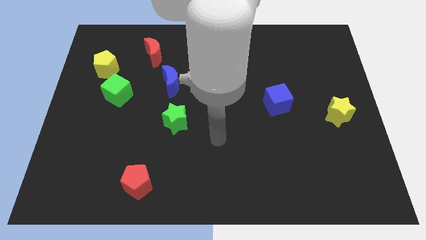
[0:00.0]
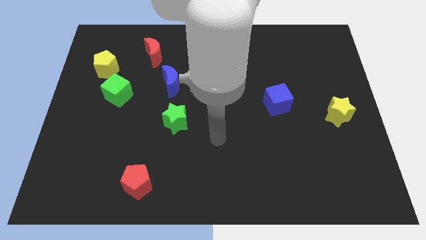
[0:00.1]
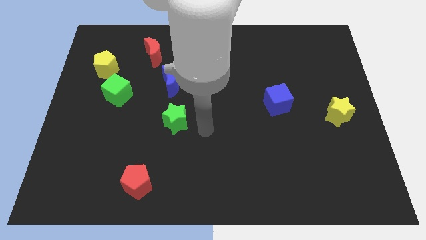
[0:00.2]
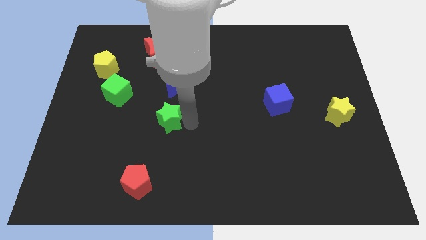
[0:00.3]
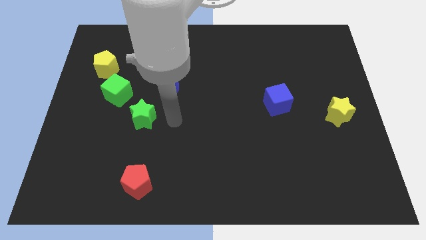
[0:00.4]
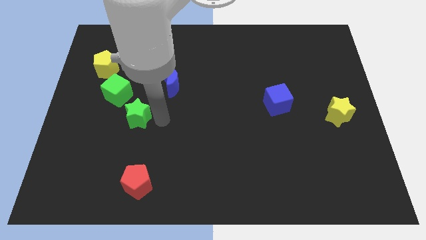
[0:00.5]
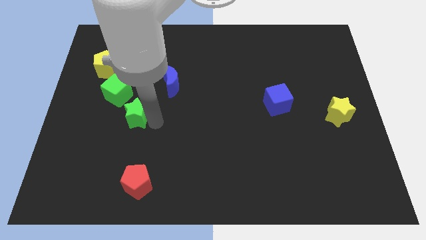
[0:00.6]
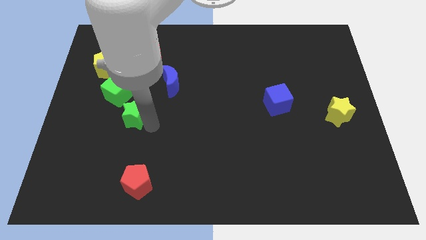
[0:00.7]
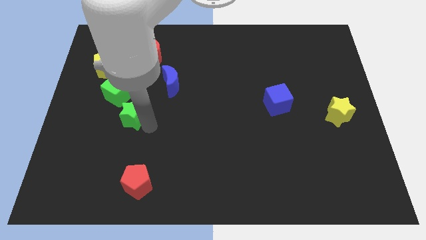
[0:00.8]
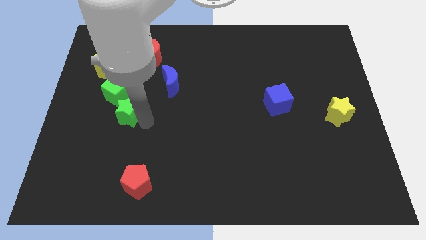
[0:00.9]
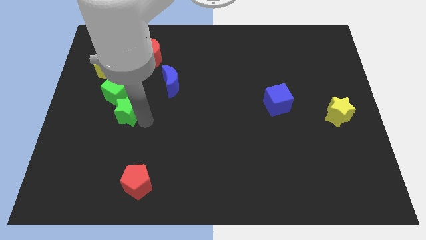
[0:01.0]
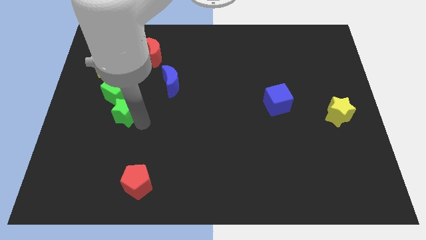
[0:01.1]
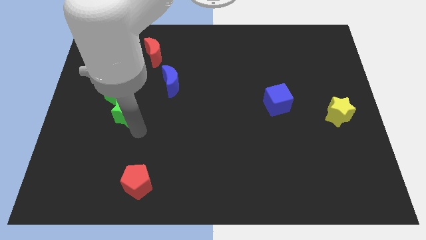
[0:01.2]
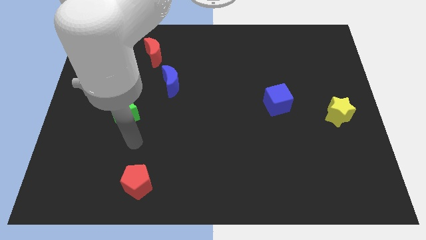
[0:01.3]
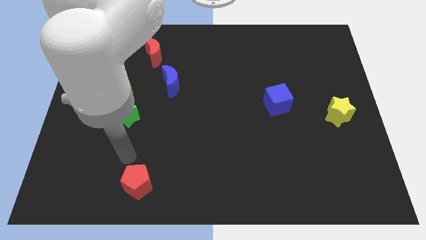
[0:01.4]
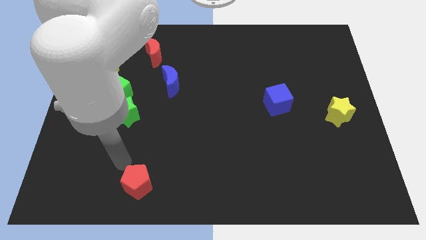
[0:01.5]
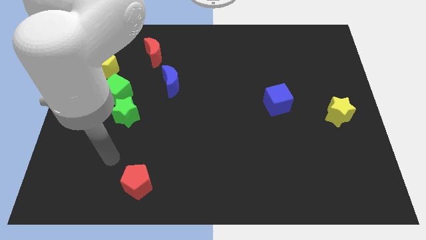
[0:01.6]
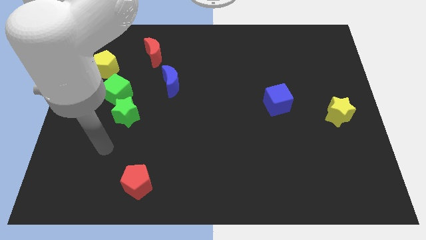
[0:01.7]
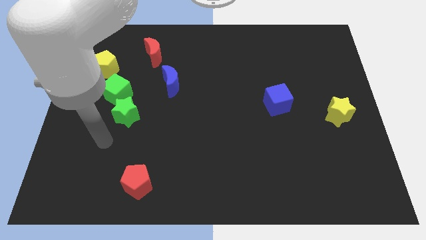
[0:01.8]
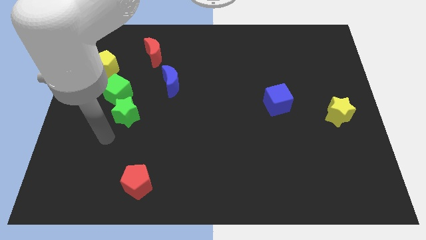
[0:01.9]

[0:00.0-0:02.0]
place the green star below the green cube

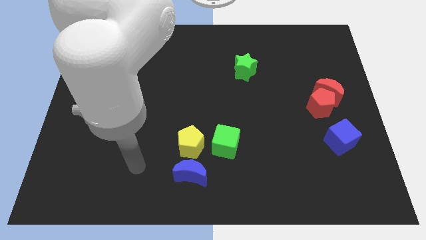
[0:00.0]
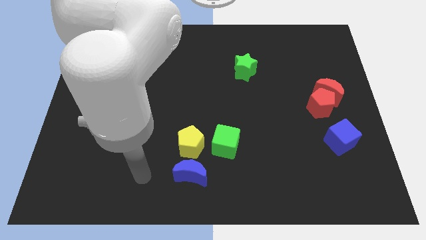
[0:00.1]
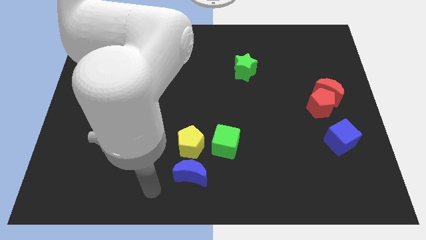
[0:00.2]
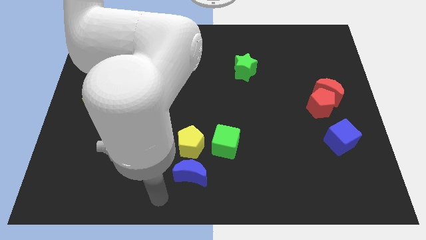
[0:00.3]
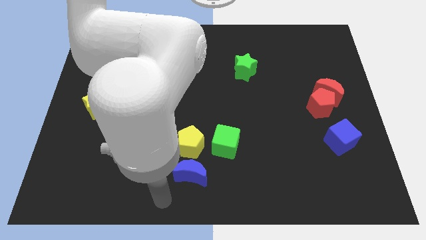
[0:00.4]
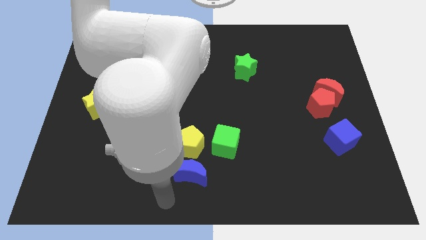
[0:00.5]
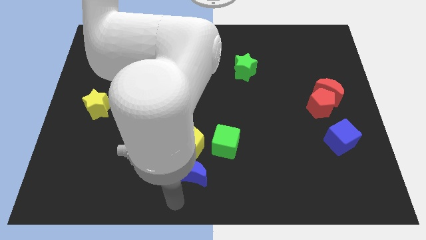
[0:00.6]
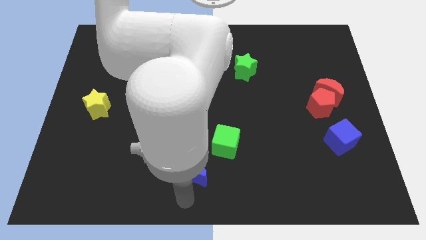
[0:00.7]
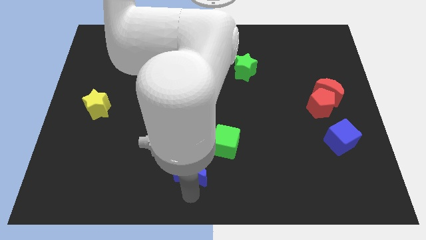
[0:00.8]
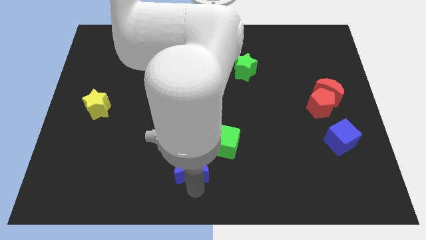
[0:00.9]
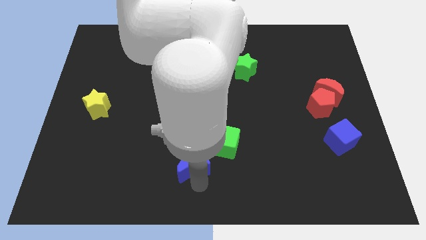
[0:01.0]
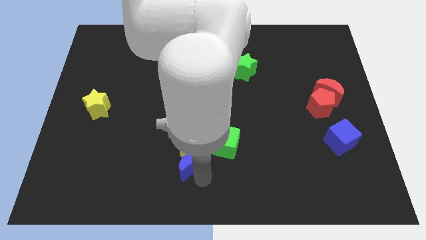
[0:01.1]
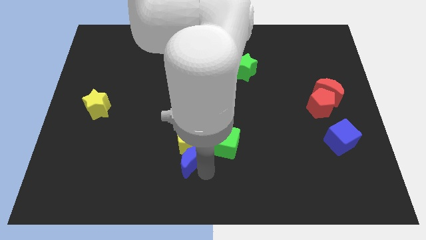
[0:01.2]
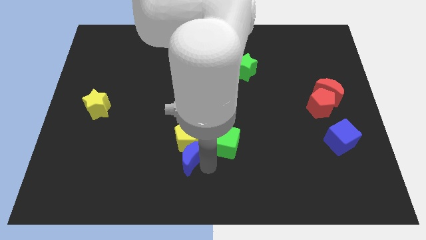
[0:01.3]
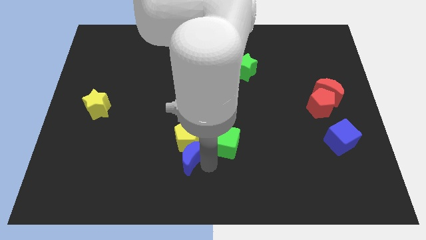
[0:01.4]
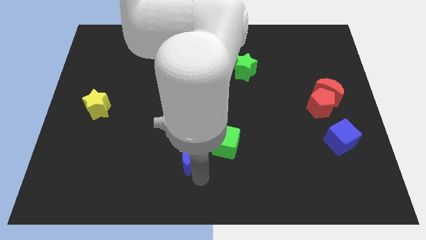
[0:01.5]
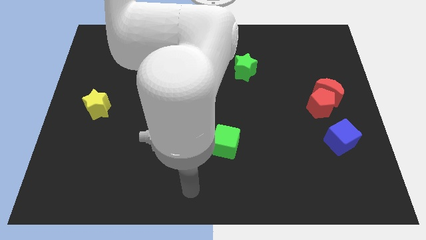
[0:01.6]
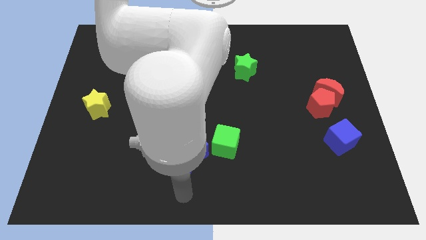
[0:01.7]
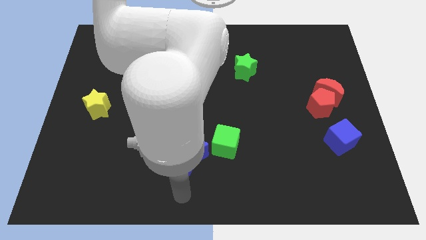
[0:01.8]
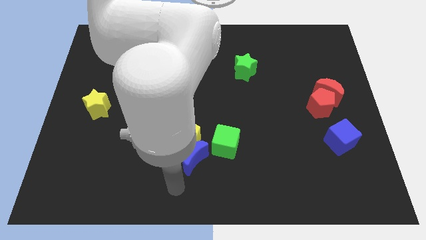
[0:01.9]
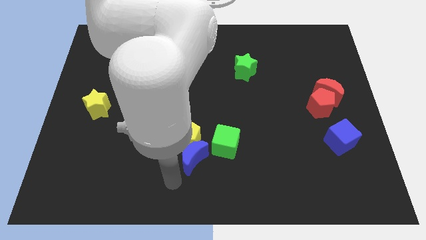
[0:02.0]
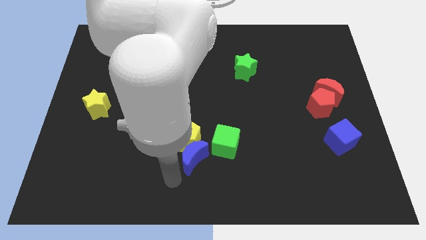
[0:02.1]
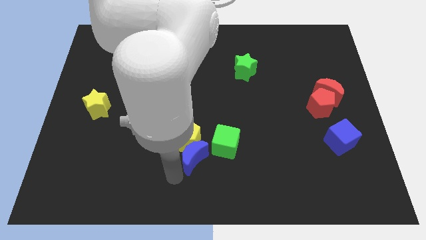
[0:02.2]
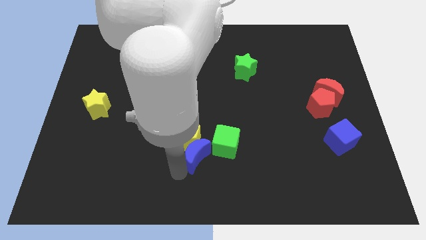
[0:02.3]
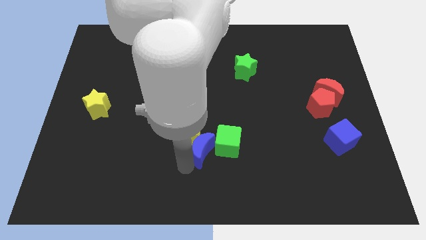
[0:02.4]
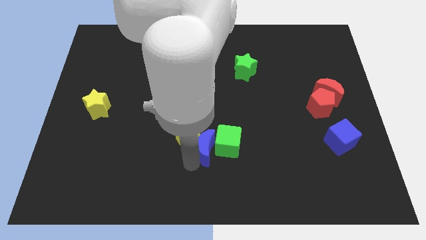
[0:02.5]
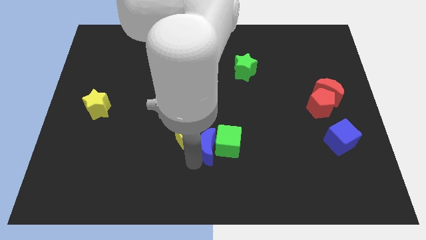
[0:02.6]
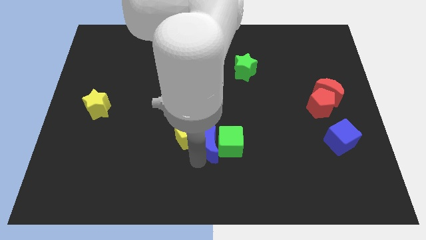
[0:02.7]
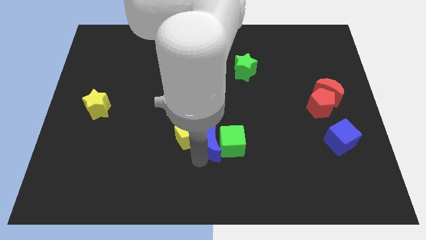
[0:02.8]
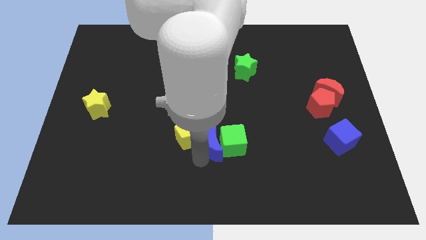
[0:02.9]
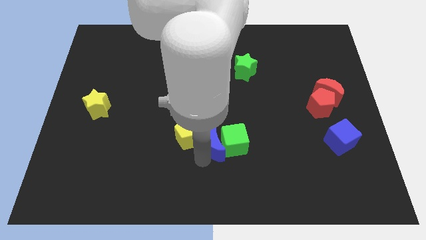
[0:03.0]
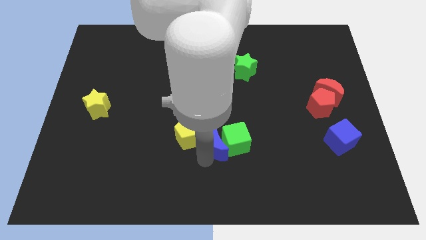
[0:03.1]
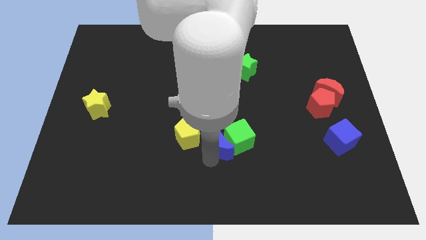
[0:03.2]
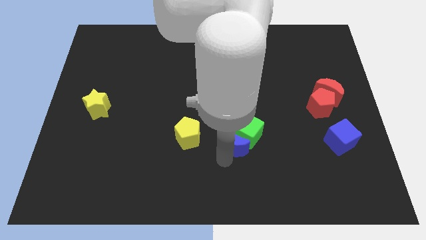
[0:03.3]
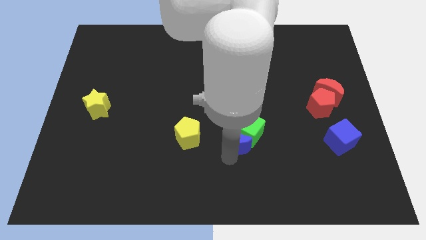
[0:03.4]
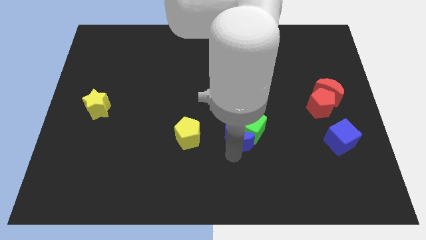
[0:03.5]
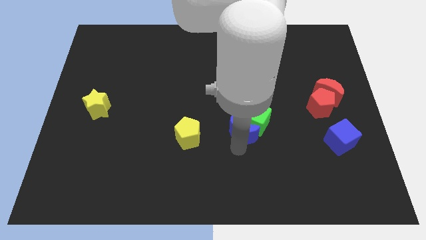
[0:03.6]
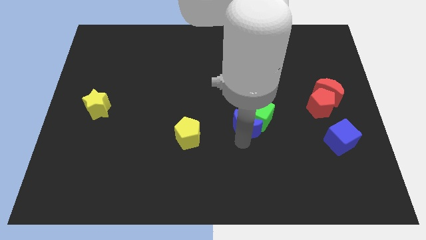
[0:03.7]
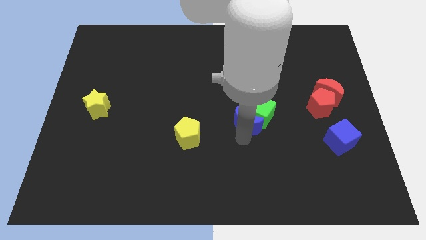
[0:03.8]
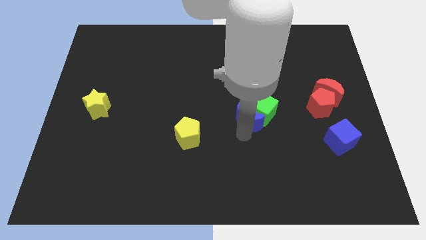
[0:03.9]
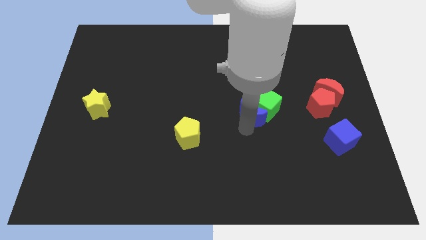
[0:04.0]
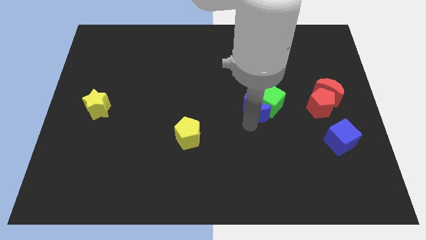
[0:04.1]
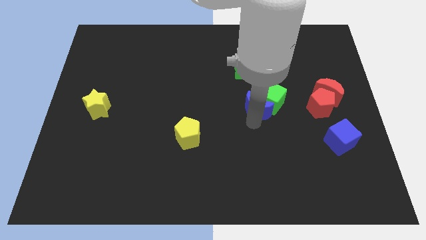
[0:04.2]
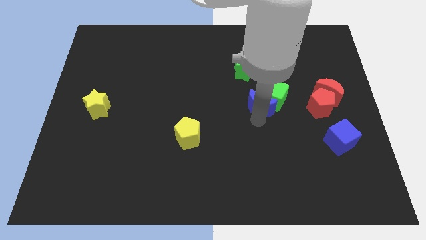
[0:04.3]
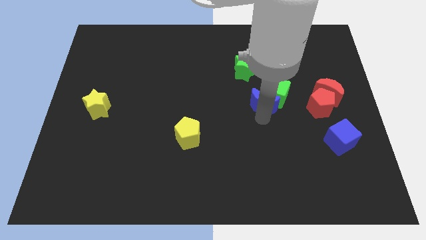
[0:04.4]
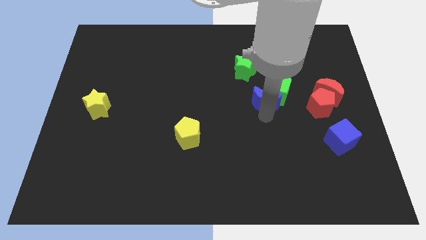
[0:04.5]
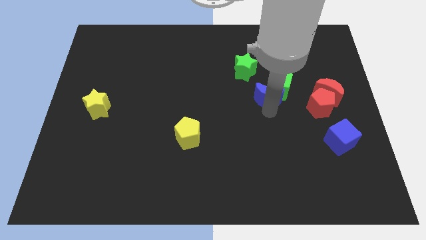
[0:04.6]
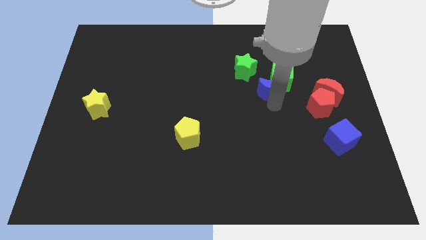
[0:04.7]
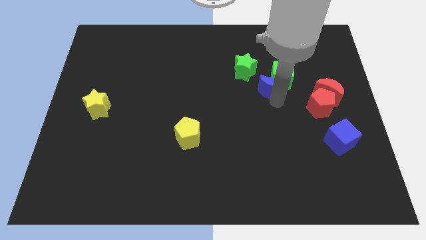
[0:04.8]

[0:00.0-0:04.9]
move the blue moon towards right center

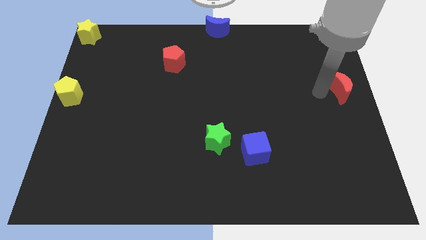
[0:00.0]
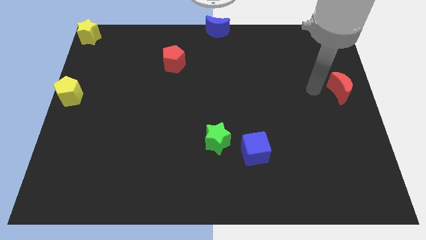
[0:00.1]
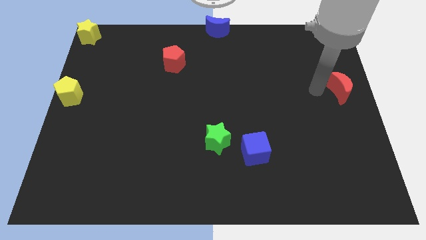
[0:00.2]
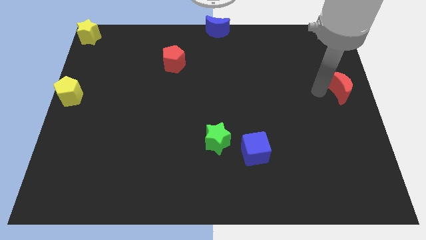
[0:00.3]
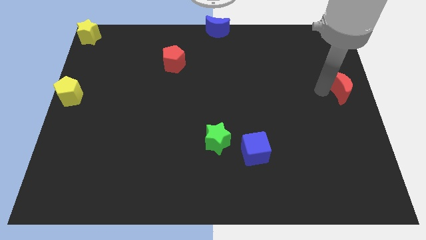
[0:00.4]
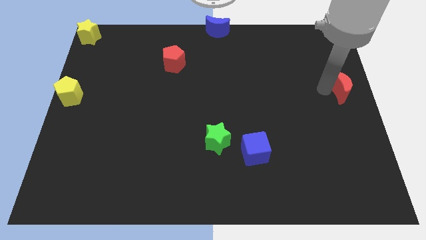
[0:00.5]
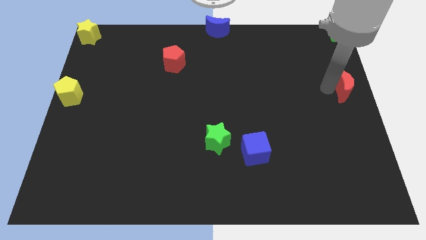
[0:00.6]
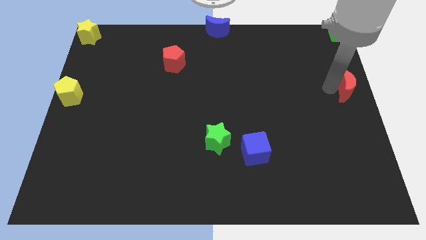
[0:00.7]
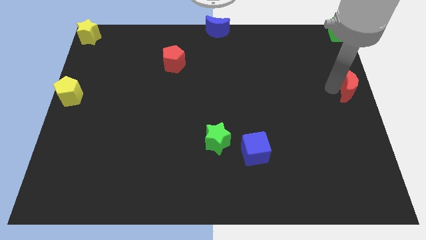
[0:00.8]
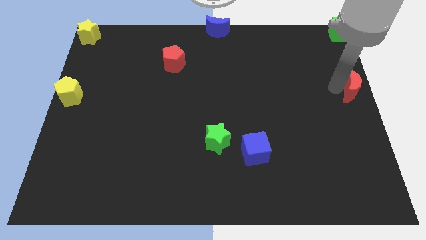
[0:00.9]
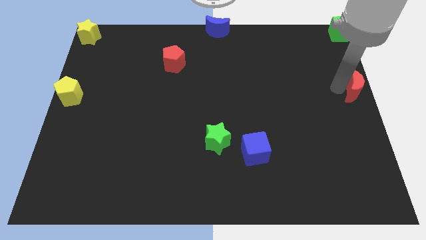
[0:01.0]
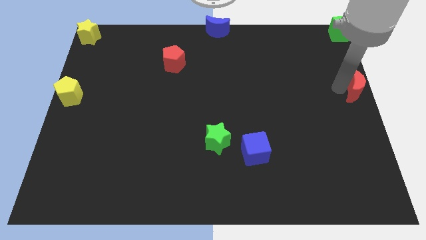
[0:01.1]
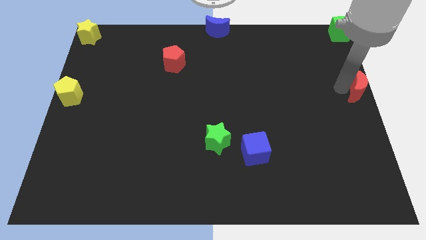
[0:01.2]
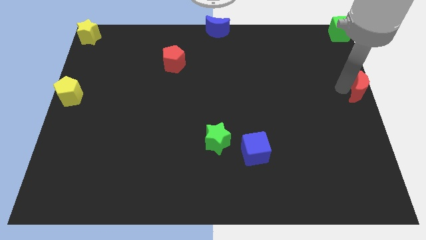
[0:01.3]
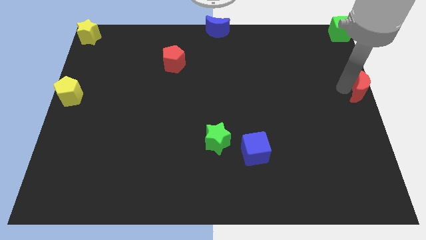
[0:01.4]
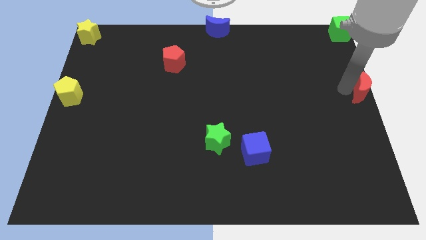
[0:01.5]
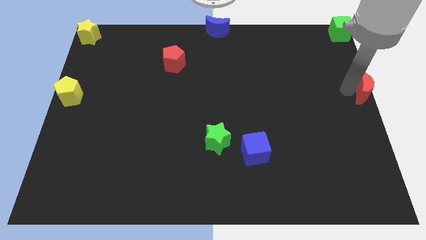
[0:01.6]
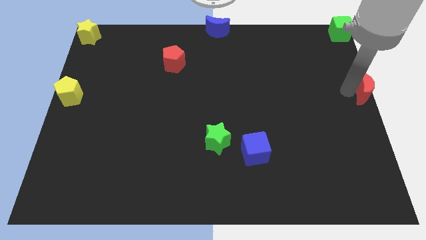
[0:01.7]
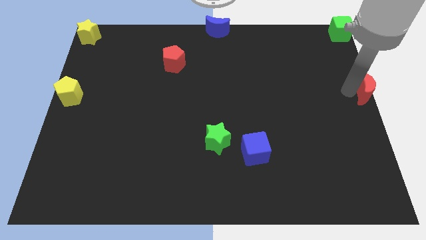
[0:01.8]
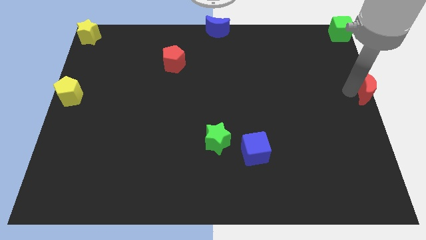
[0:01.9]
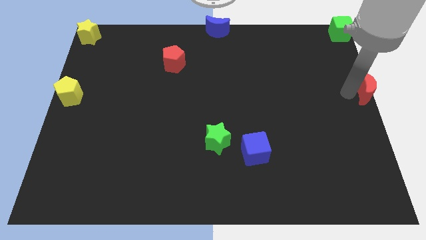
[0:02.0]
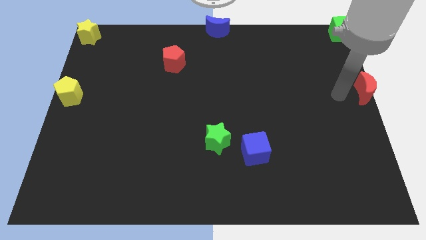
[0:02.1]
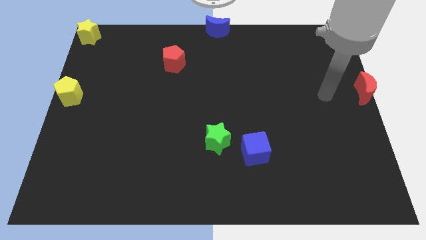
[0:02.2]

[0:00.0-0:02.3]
push the red moon to the center right
